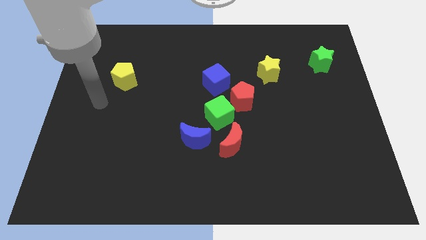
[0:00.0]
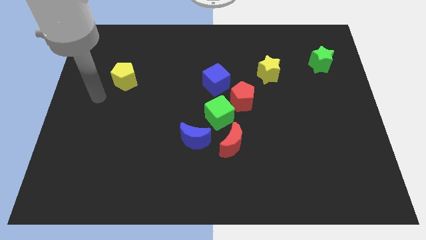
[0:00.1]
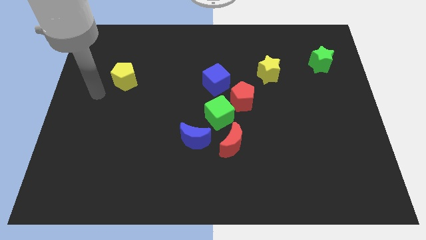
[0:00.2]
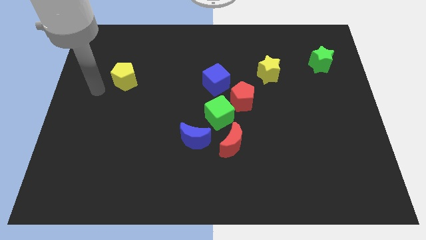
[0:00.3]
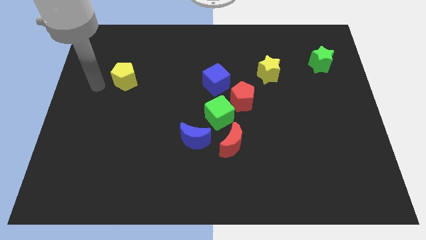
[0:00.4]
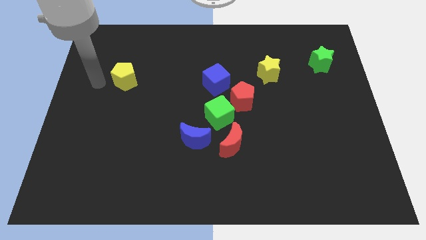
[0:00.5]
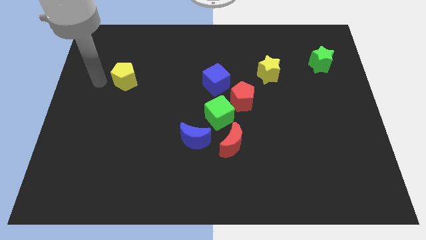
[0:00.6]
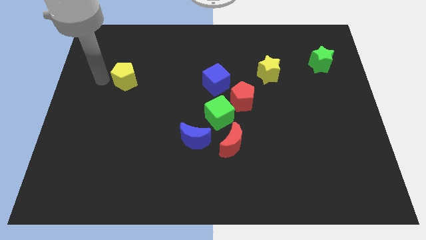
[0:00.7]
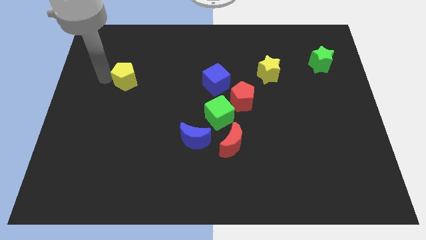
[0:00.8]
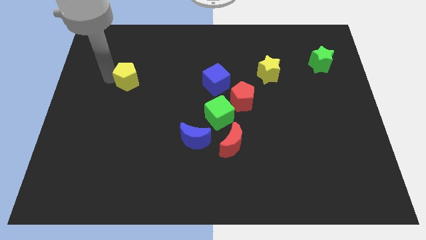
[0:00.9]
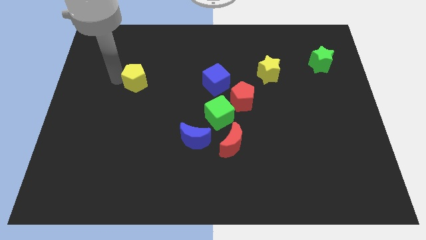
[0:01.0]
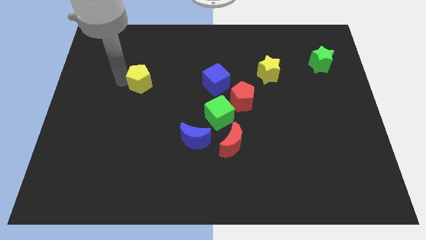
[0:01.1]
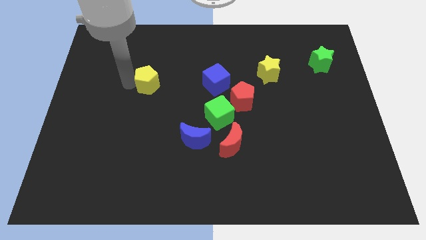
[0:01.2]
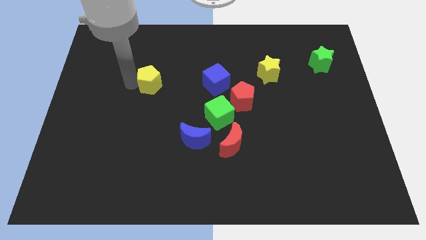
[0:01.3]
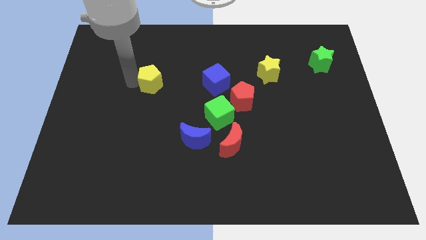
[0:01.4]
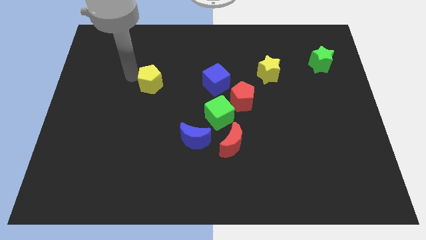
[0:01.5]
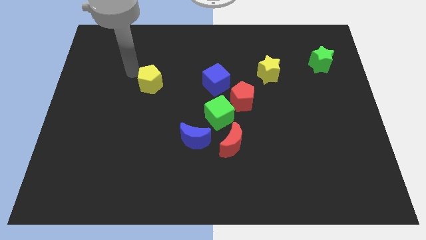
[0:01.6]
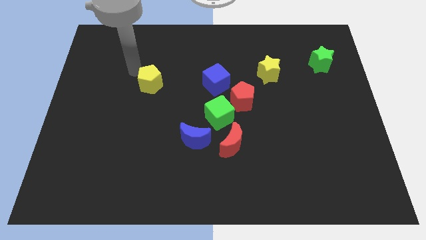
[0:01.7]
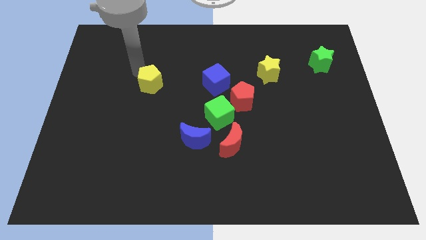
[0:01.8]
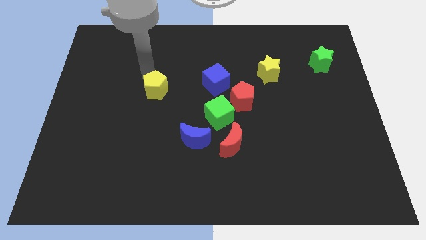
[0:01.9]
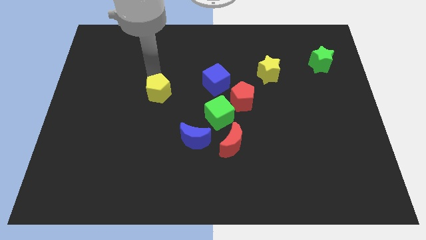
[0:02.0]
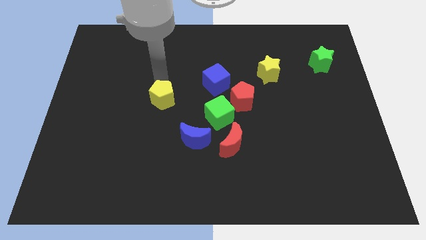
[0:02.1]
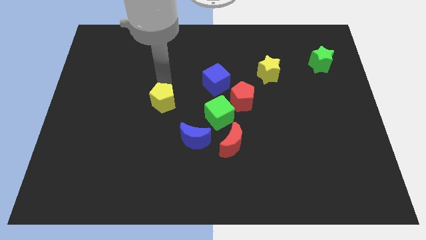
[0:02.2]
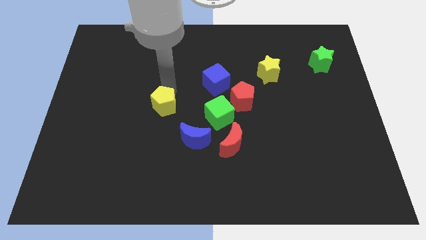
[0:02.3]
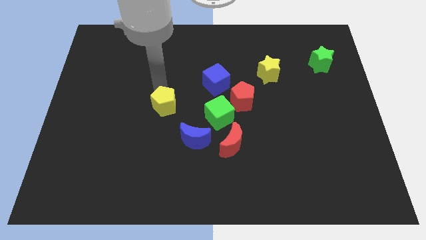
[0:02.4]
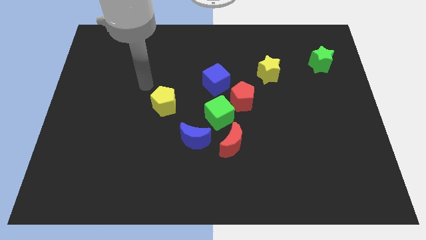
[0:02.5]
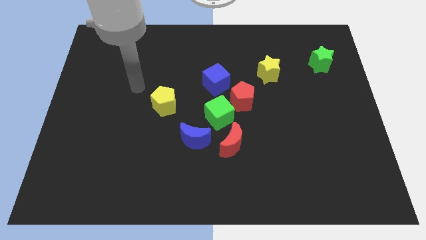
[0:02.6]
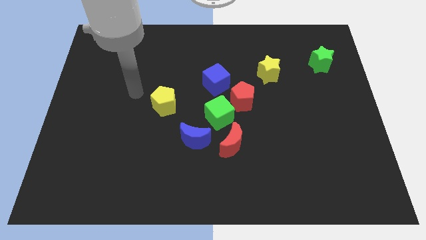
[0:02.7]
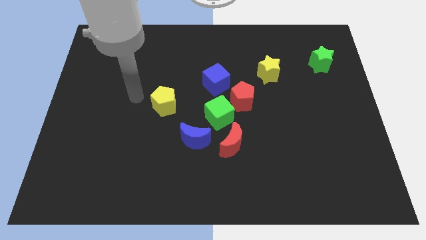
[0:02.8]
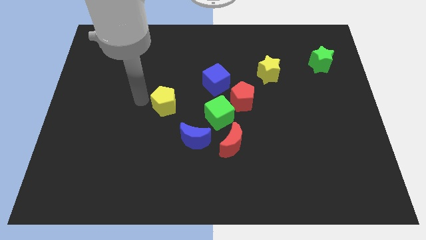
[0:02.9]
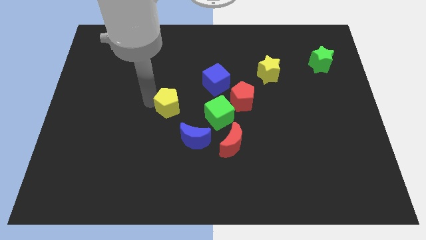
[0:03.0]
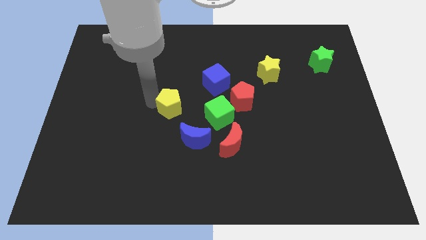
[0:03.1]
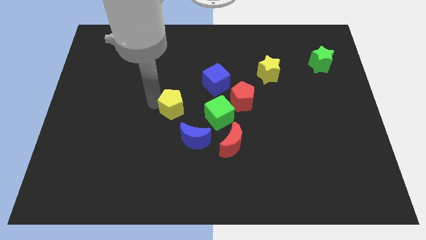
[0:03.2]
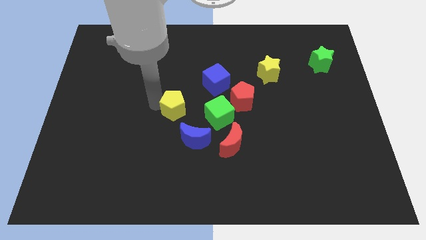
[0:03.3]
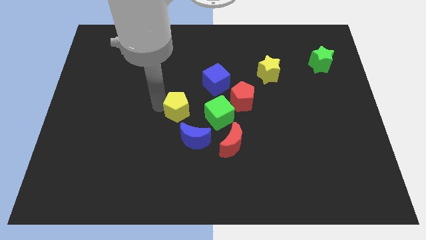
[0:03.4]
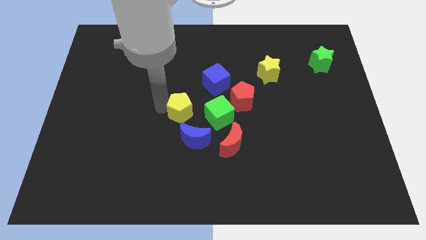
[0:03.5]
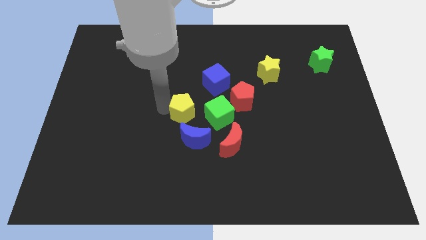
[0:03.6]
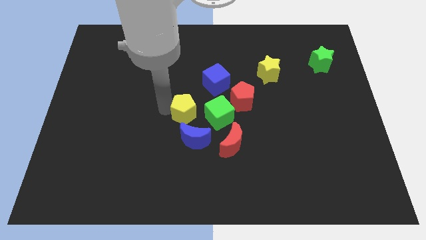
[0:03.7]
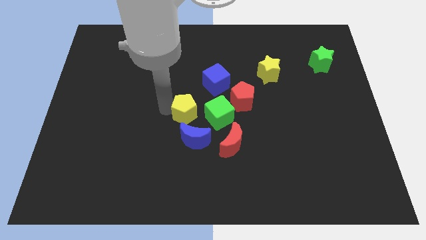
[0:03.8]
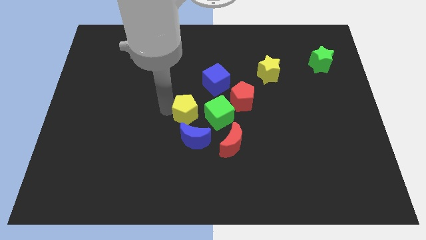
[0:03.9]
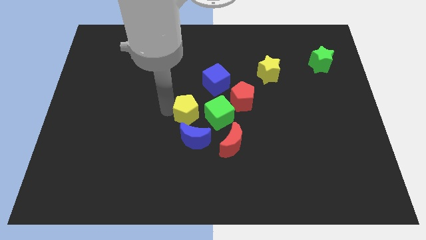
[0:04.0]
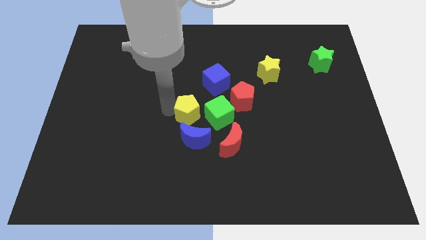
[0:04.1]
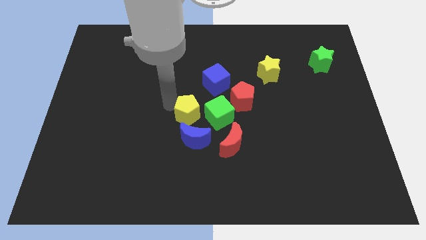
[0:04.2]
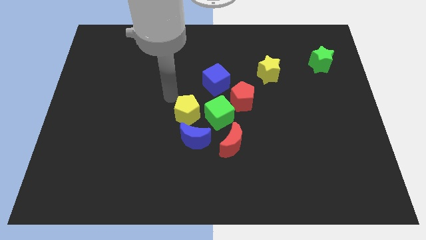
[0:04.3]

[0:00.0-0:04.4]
push the yellow pentagon left to the green cube

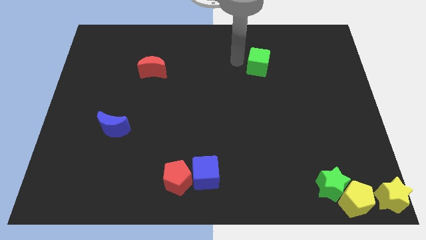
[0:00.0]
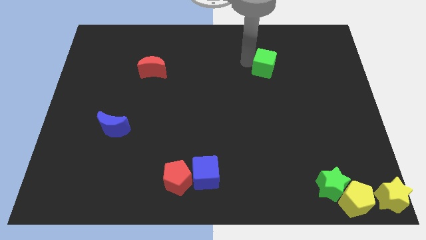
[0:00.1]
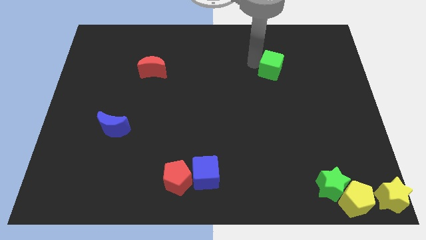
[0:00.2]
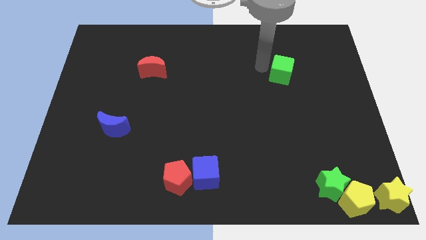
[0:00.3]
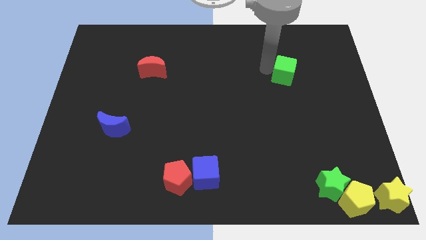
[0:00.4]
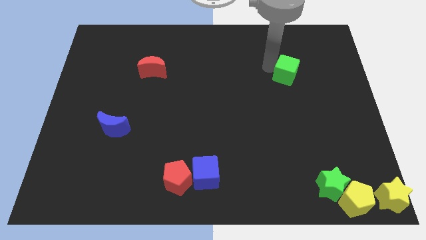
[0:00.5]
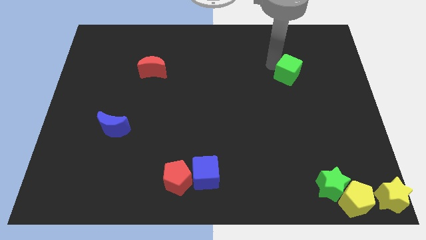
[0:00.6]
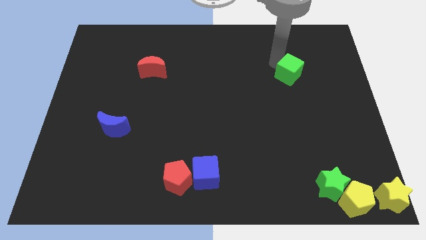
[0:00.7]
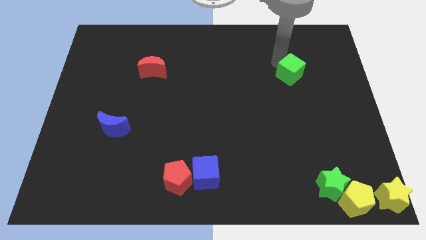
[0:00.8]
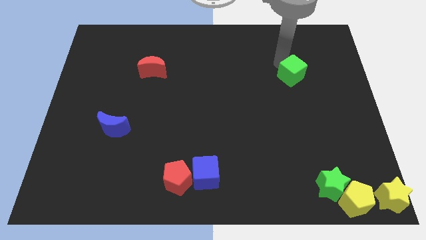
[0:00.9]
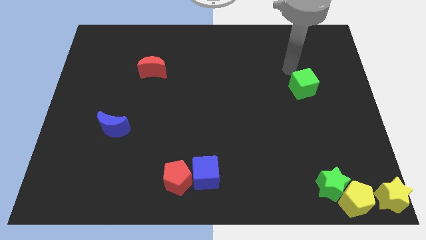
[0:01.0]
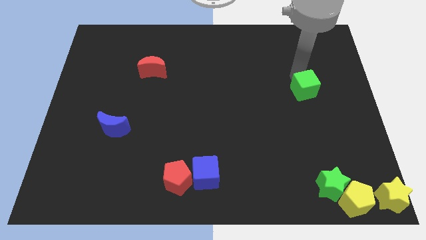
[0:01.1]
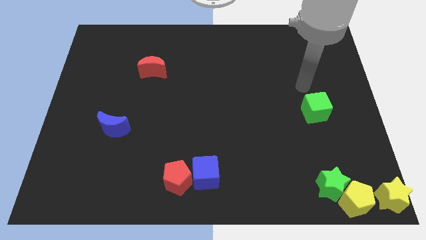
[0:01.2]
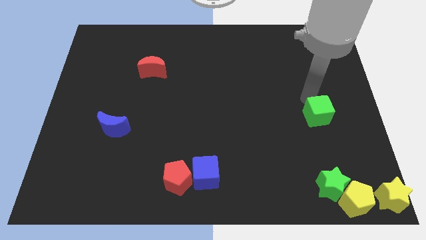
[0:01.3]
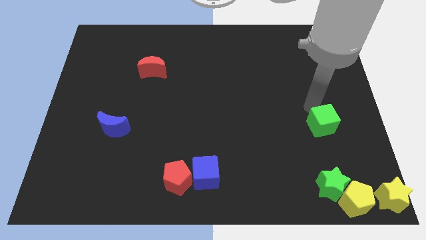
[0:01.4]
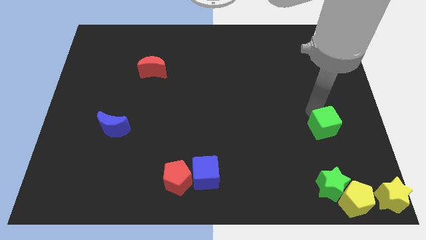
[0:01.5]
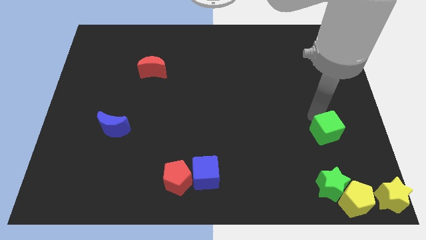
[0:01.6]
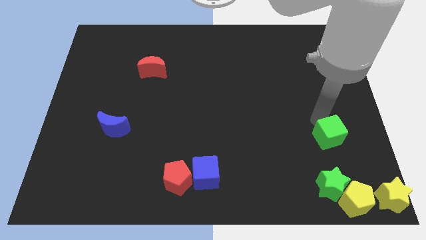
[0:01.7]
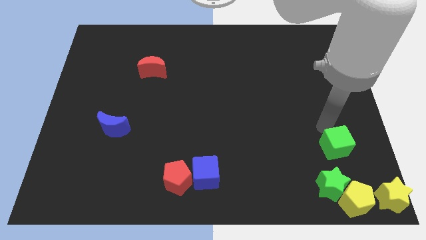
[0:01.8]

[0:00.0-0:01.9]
move the green cube vertically above the green star

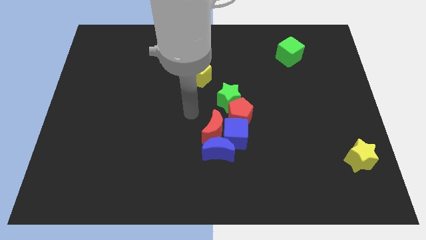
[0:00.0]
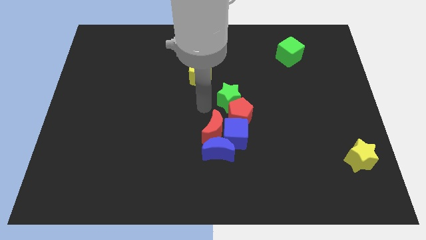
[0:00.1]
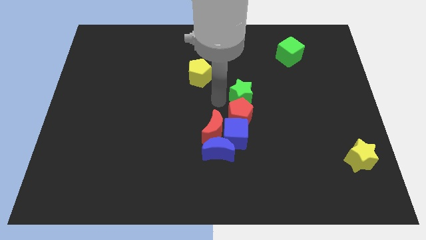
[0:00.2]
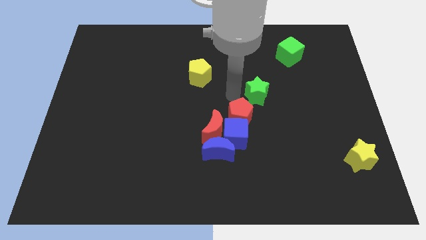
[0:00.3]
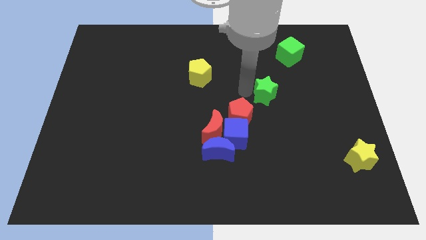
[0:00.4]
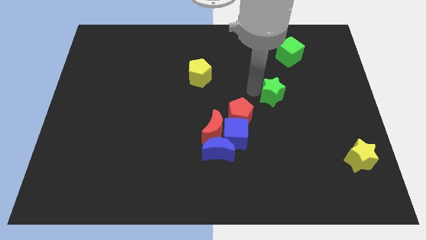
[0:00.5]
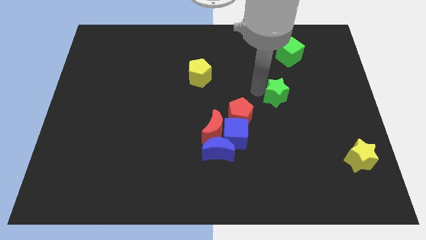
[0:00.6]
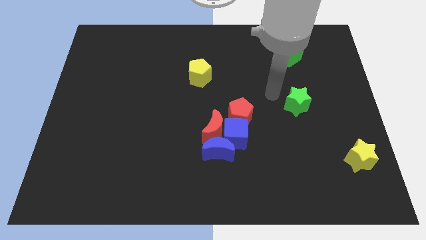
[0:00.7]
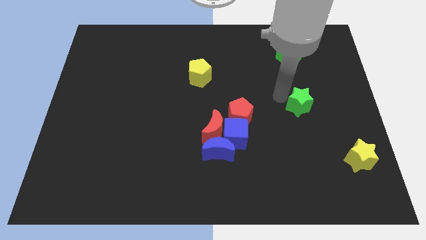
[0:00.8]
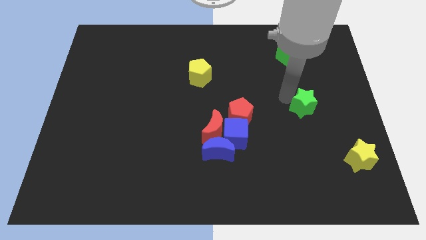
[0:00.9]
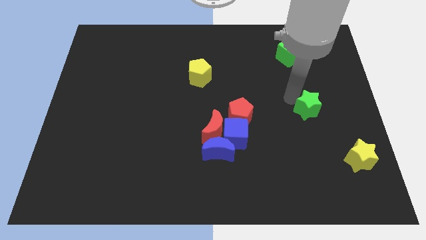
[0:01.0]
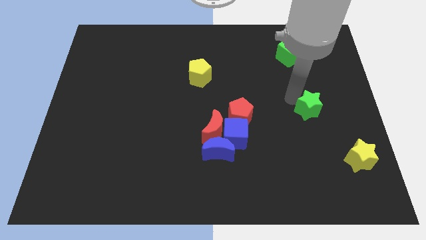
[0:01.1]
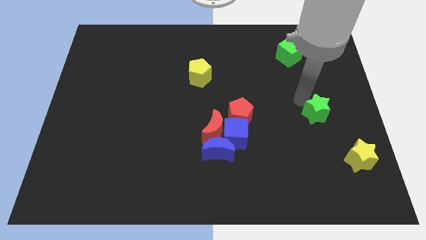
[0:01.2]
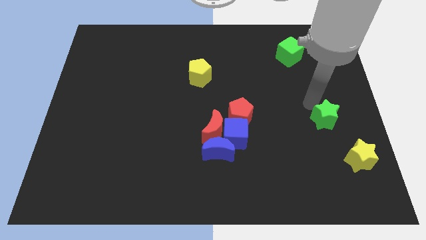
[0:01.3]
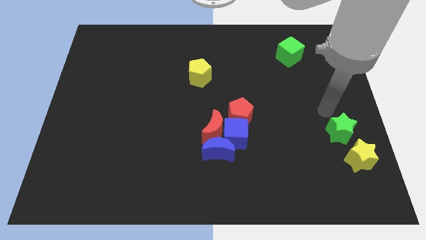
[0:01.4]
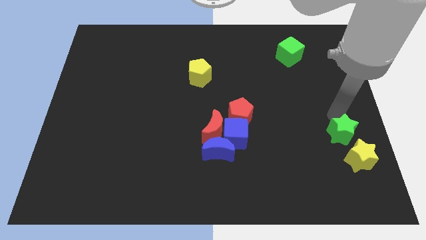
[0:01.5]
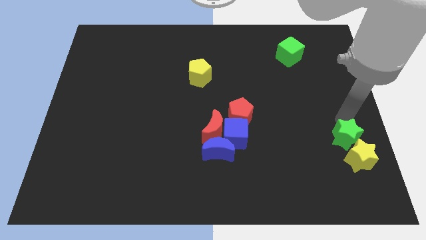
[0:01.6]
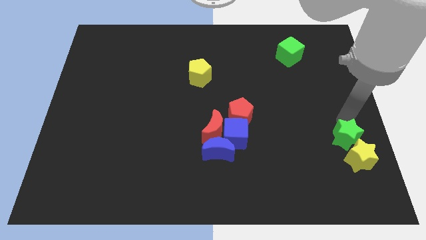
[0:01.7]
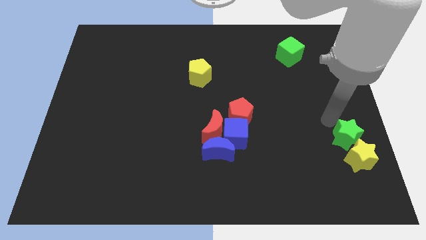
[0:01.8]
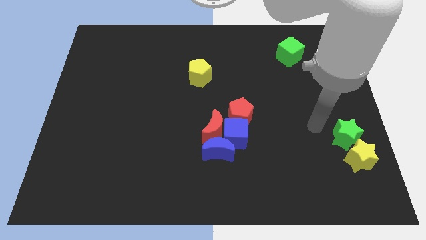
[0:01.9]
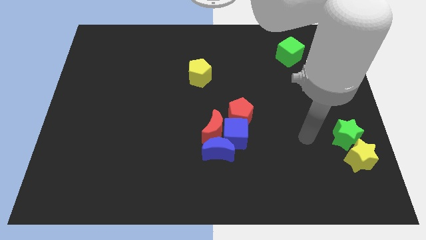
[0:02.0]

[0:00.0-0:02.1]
drag the green star to the top left of the yellow star

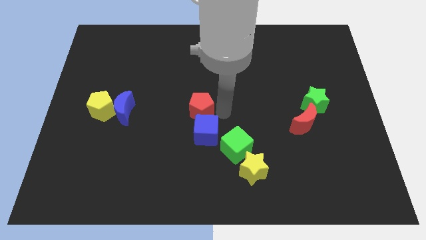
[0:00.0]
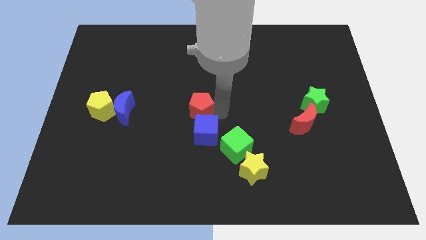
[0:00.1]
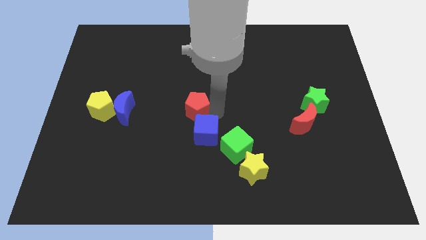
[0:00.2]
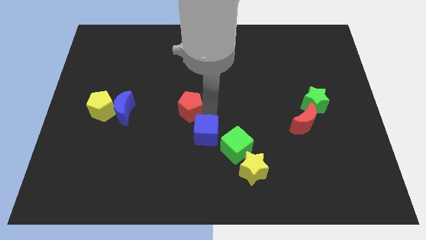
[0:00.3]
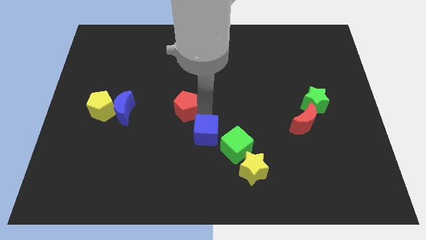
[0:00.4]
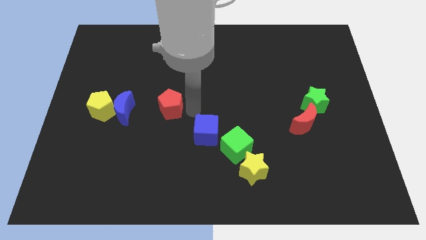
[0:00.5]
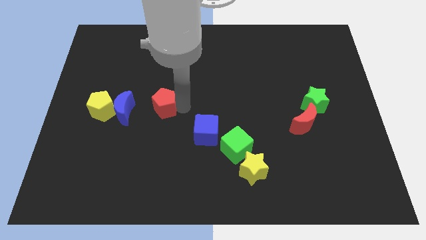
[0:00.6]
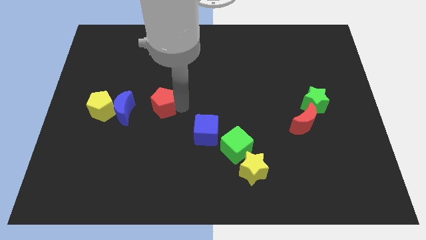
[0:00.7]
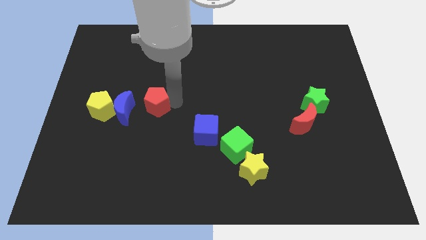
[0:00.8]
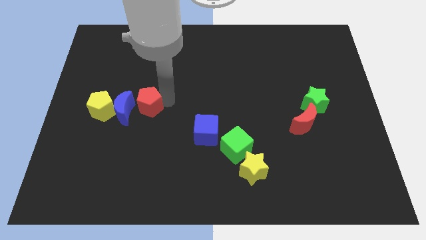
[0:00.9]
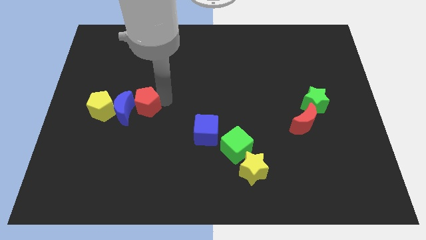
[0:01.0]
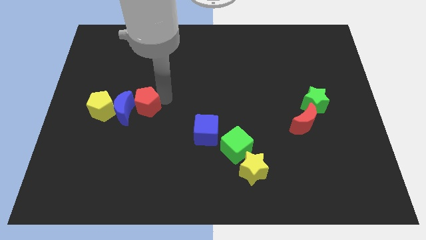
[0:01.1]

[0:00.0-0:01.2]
push the red pentagon towards the blue moon
